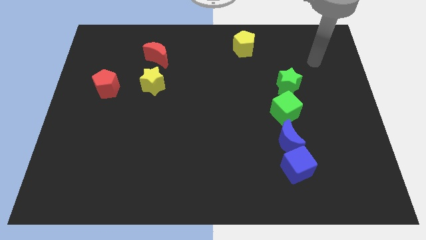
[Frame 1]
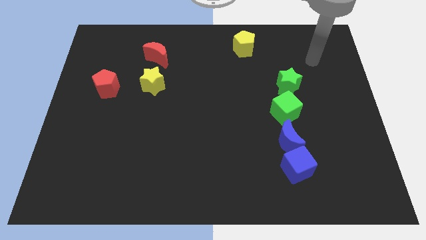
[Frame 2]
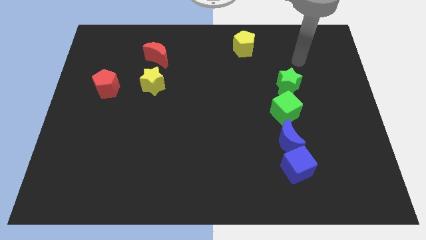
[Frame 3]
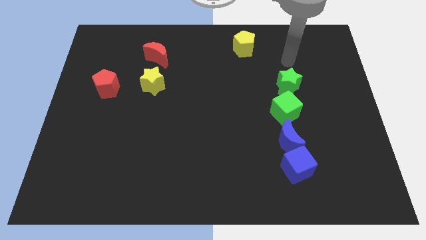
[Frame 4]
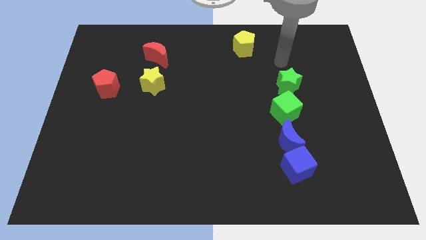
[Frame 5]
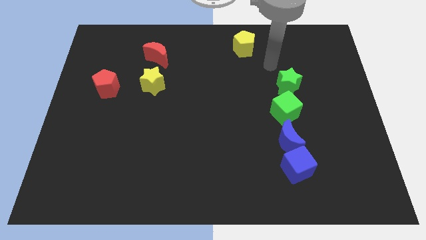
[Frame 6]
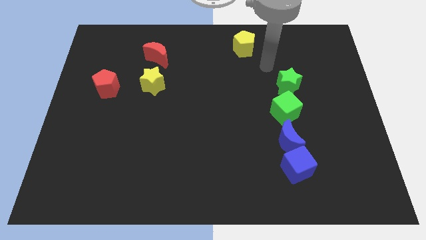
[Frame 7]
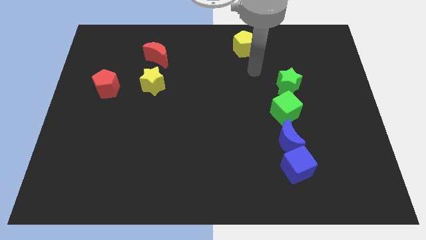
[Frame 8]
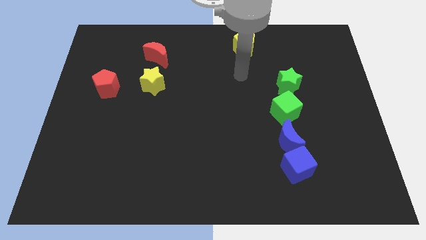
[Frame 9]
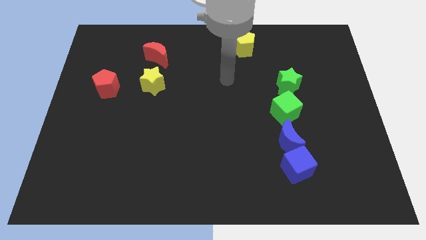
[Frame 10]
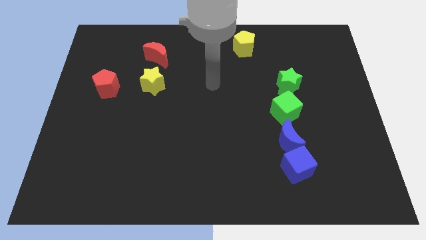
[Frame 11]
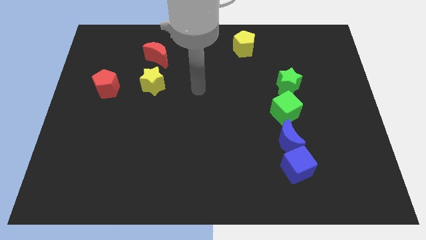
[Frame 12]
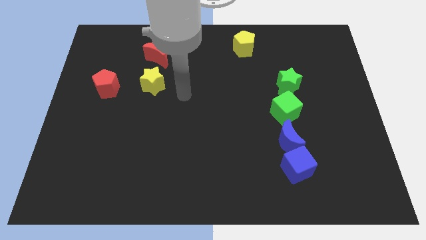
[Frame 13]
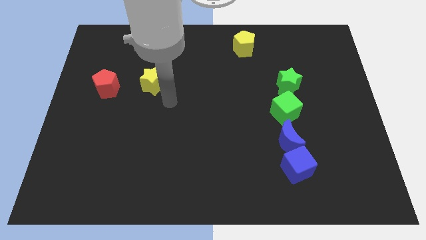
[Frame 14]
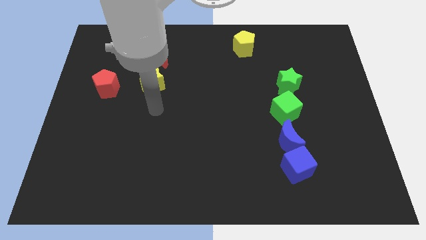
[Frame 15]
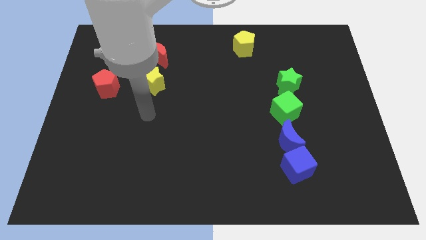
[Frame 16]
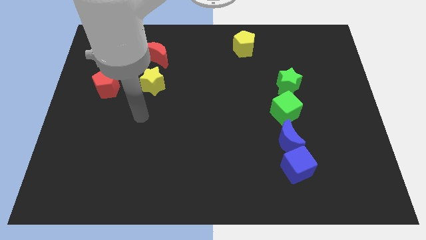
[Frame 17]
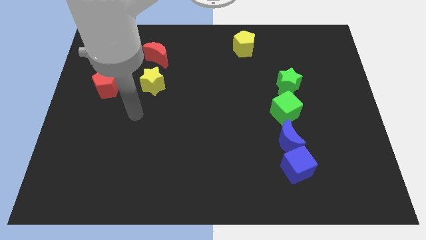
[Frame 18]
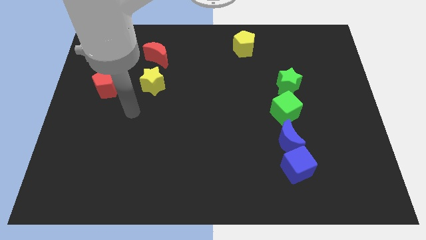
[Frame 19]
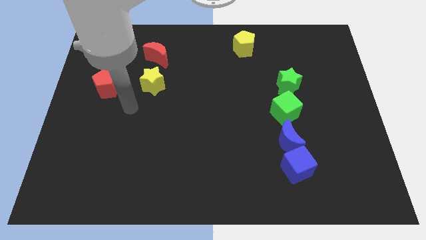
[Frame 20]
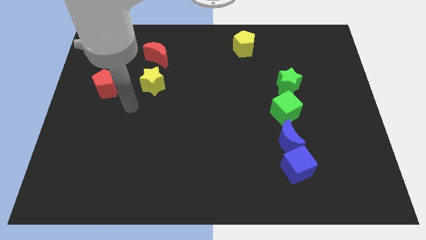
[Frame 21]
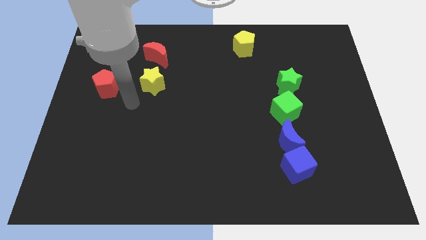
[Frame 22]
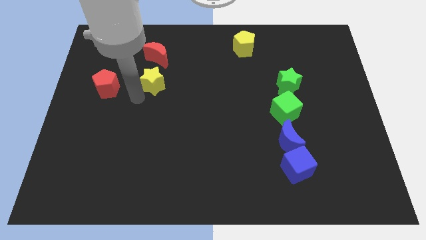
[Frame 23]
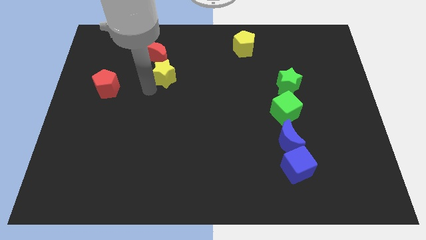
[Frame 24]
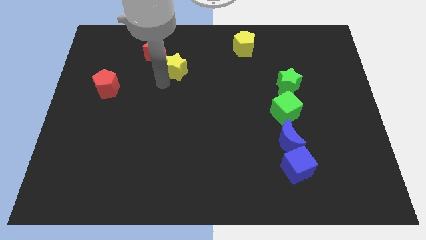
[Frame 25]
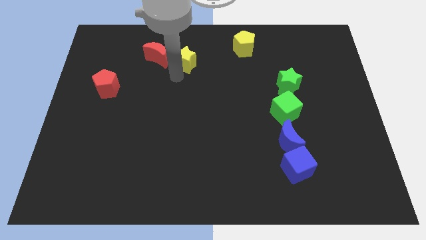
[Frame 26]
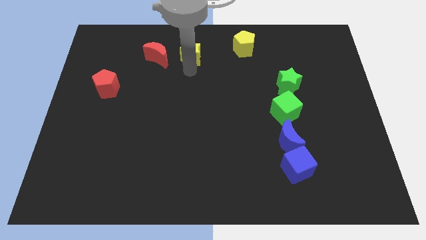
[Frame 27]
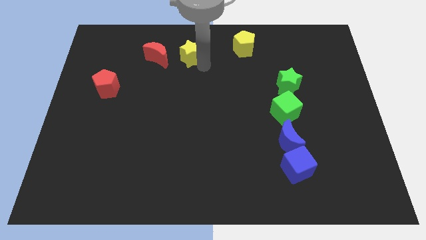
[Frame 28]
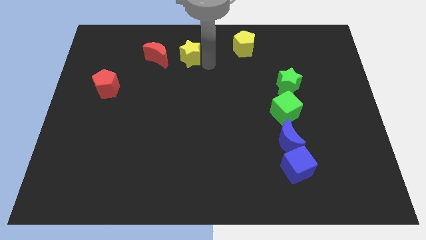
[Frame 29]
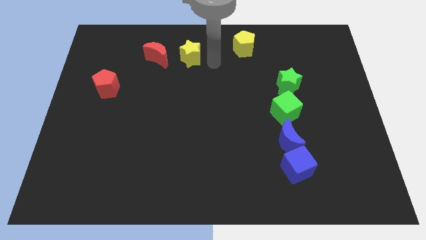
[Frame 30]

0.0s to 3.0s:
place the yellow star to the right of the red crescent

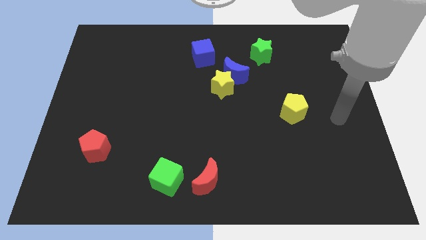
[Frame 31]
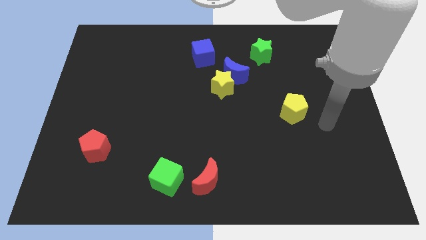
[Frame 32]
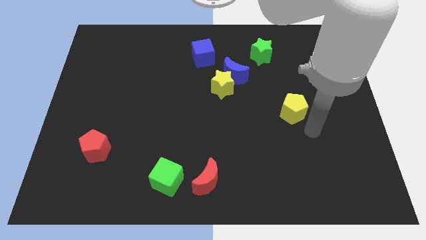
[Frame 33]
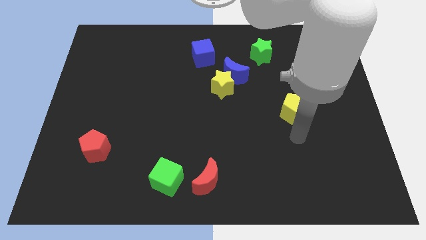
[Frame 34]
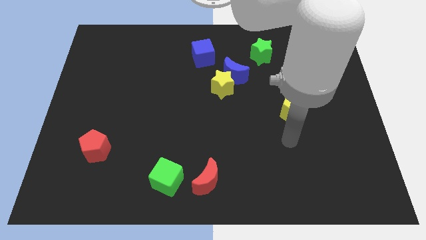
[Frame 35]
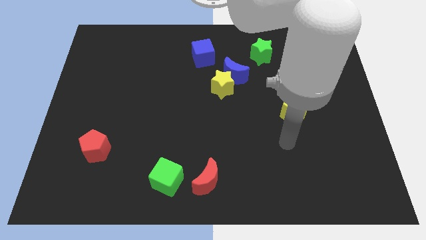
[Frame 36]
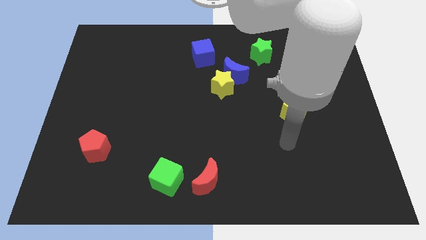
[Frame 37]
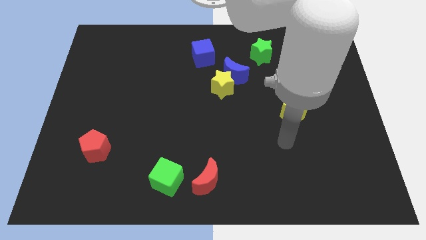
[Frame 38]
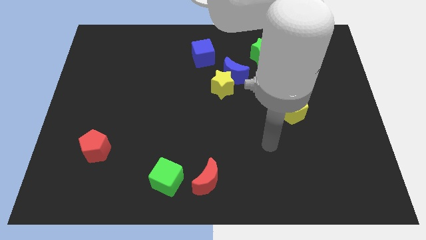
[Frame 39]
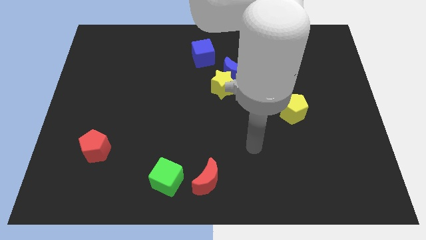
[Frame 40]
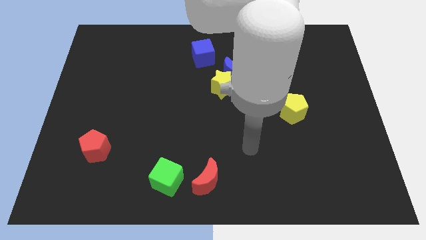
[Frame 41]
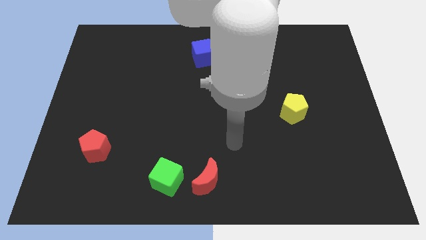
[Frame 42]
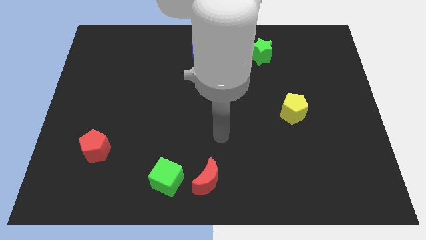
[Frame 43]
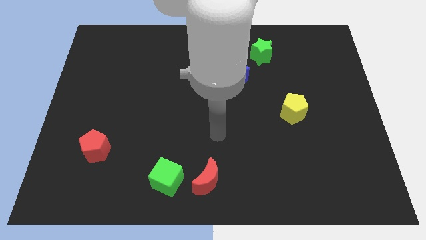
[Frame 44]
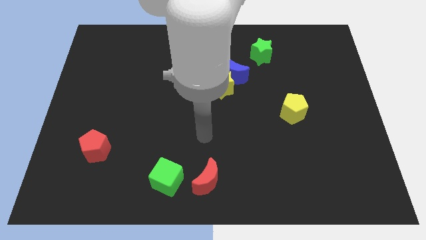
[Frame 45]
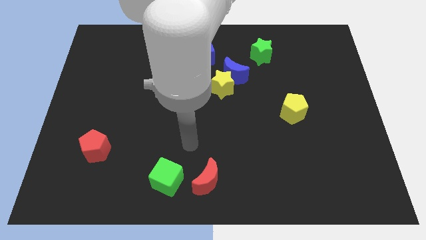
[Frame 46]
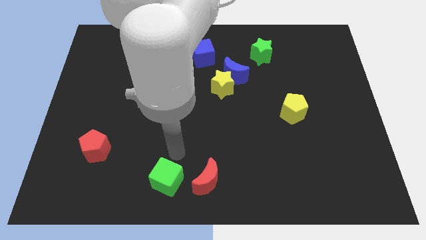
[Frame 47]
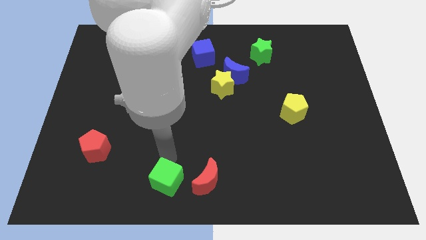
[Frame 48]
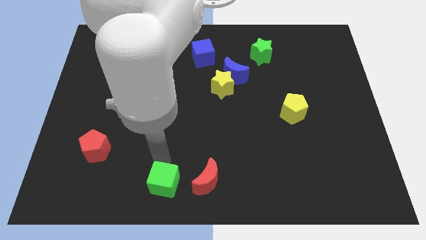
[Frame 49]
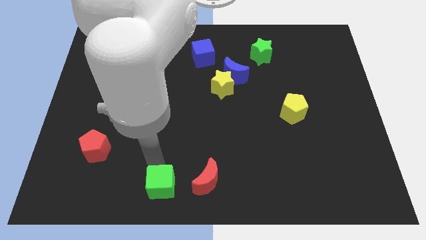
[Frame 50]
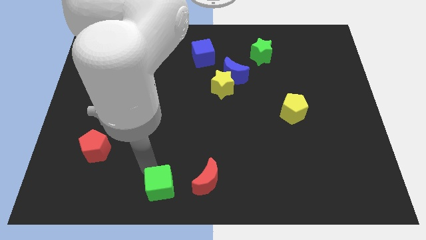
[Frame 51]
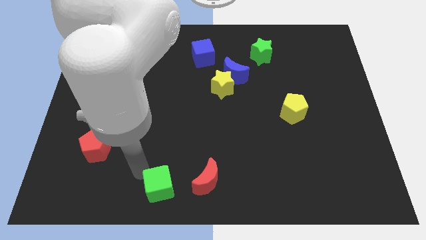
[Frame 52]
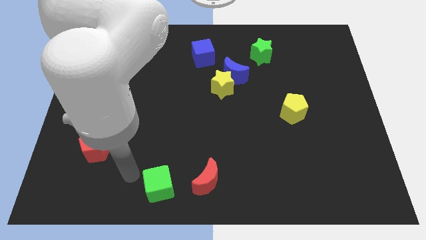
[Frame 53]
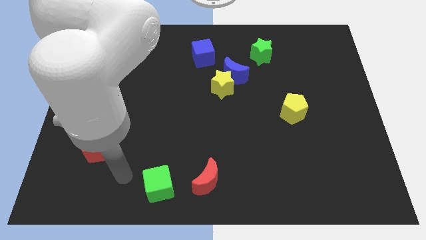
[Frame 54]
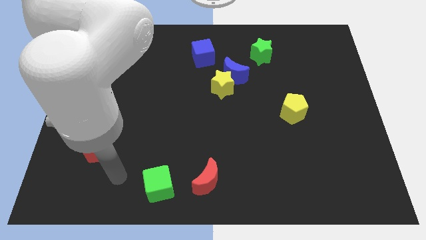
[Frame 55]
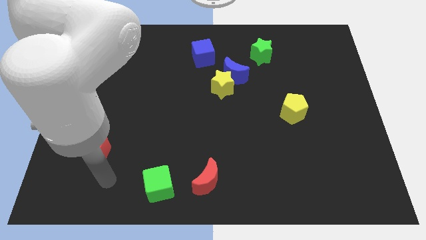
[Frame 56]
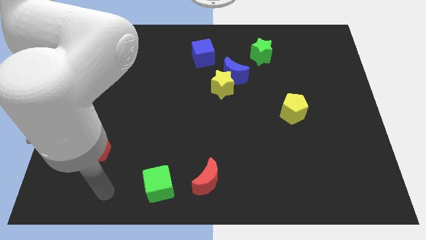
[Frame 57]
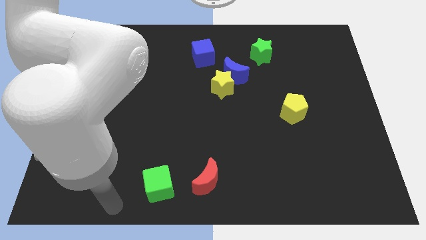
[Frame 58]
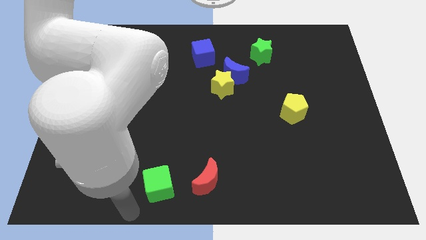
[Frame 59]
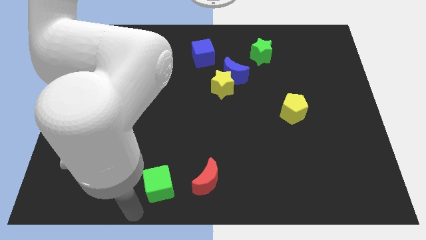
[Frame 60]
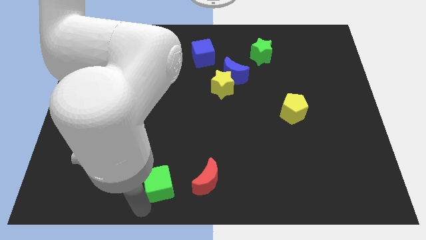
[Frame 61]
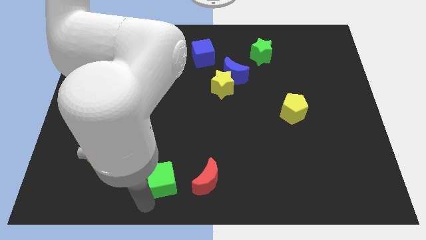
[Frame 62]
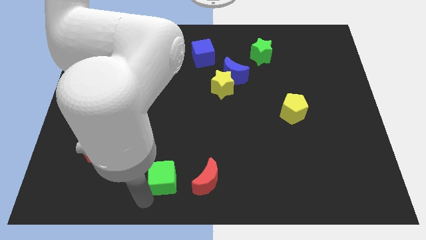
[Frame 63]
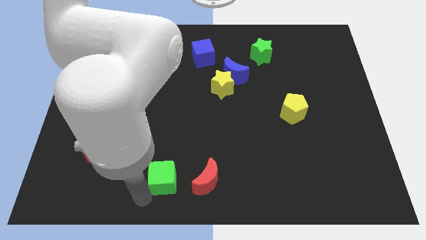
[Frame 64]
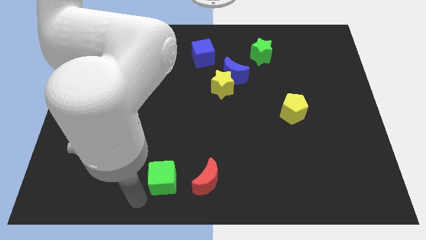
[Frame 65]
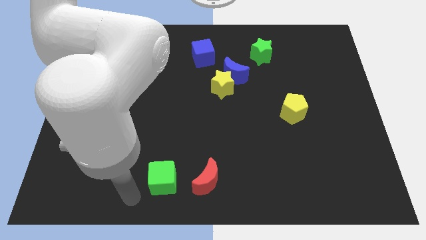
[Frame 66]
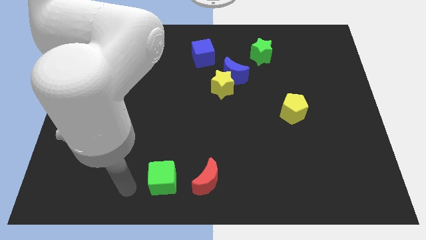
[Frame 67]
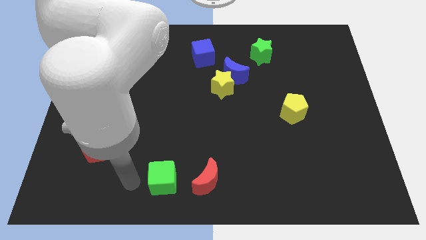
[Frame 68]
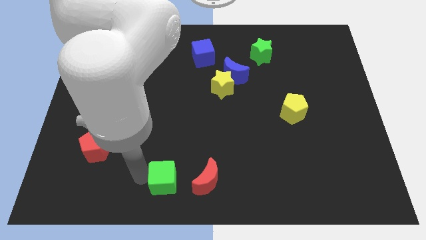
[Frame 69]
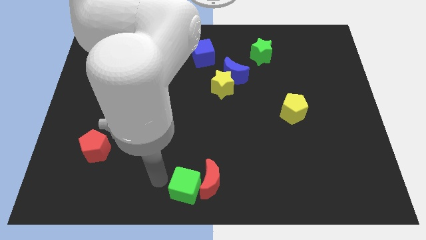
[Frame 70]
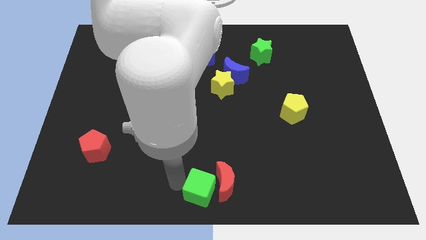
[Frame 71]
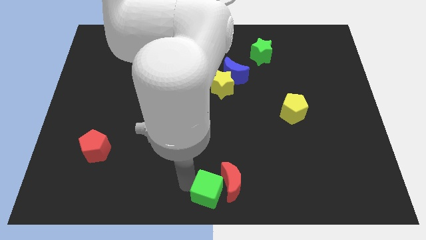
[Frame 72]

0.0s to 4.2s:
place the green cube and red crescent at the bottom center of the board

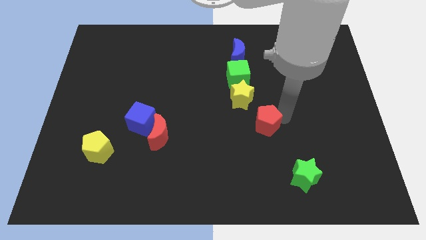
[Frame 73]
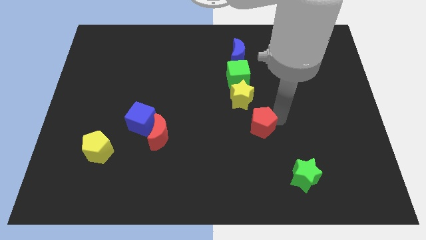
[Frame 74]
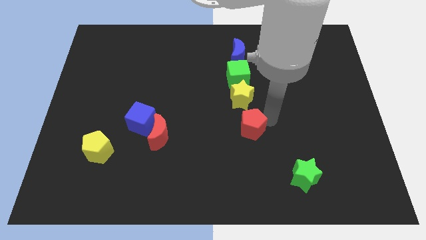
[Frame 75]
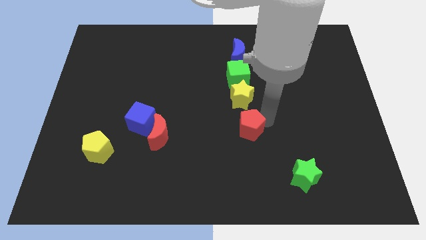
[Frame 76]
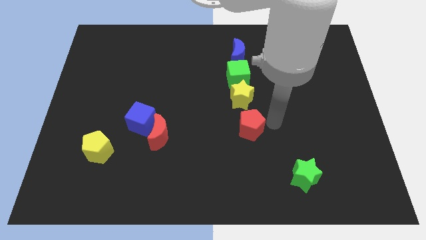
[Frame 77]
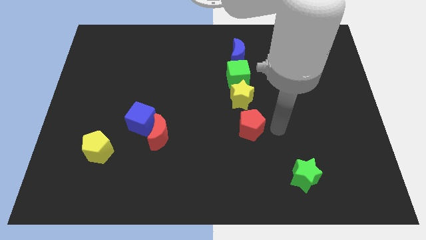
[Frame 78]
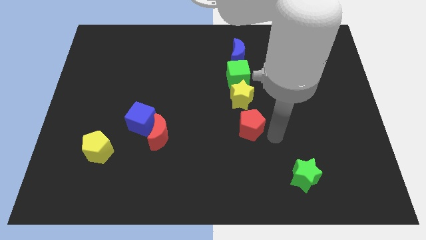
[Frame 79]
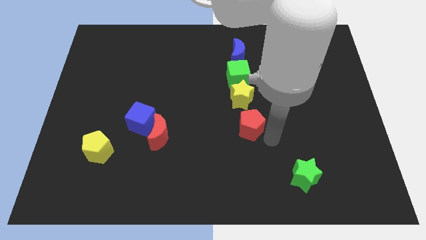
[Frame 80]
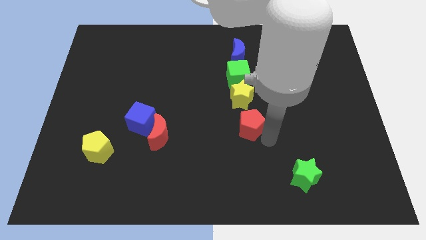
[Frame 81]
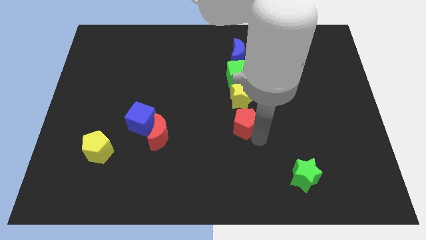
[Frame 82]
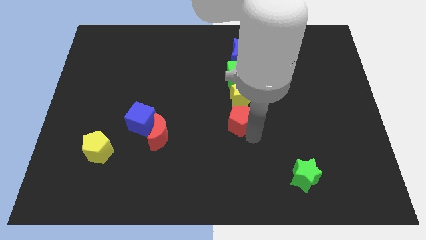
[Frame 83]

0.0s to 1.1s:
place red pentagon below yellow star

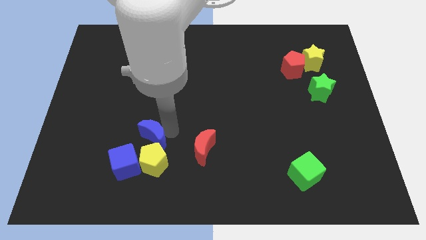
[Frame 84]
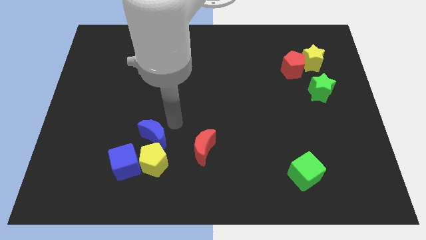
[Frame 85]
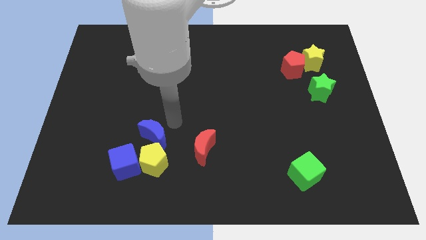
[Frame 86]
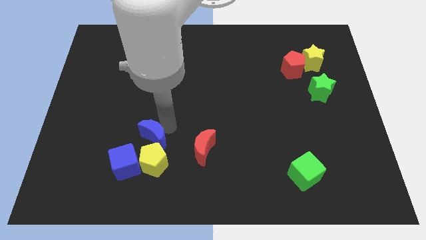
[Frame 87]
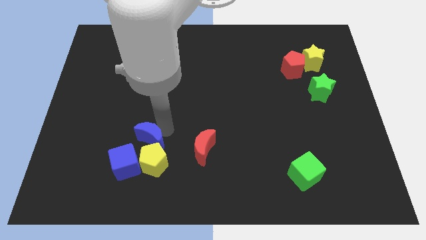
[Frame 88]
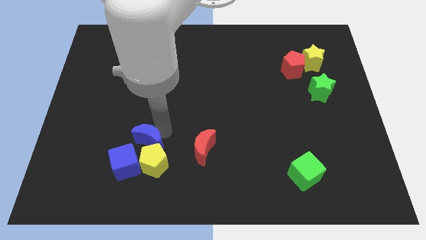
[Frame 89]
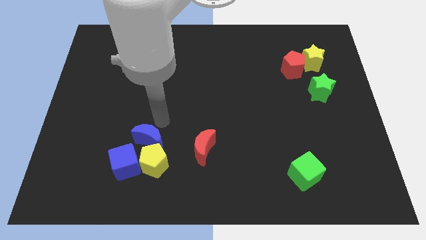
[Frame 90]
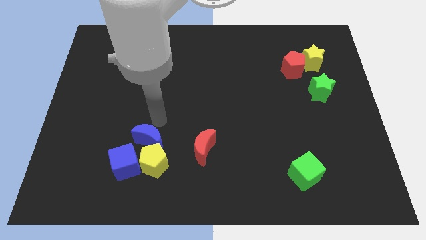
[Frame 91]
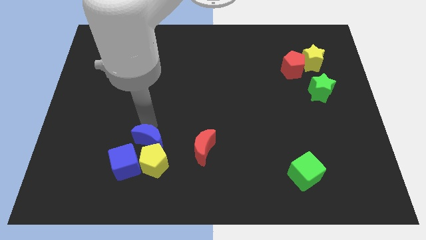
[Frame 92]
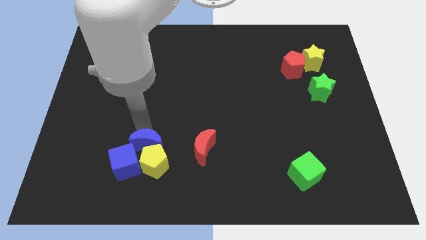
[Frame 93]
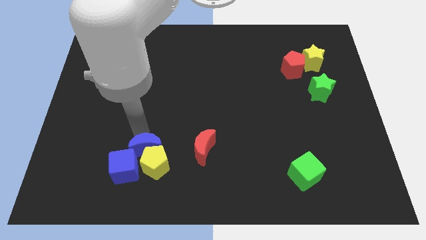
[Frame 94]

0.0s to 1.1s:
slide blue moon to the top right of blue cube
